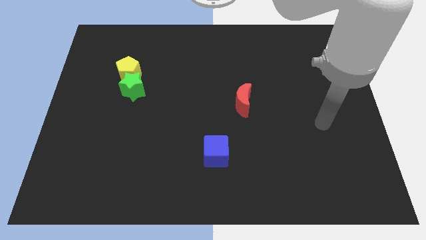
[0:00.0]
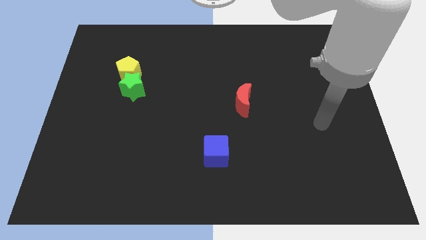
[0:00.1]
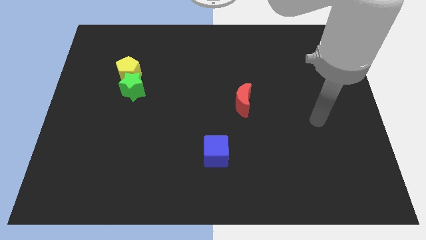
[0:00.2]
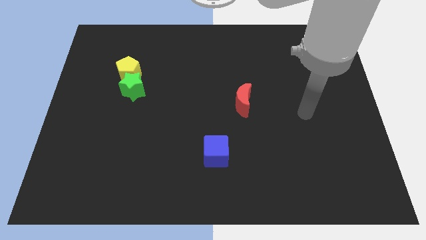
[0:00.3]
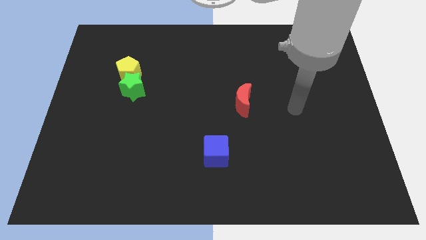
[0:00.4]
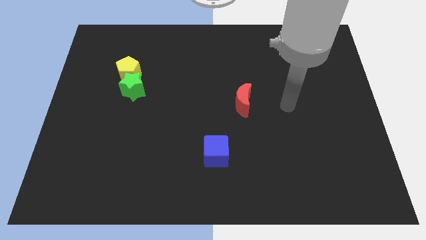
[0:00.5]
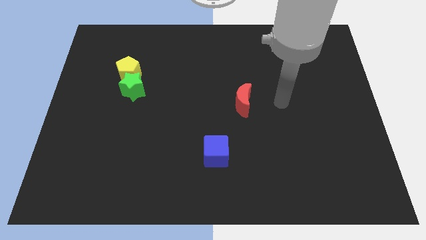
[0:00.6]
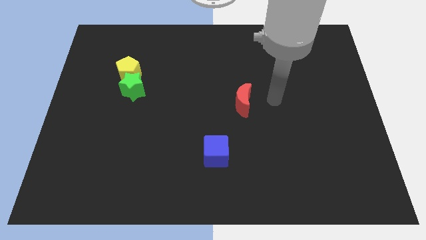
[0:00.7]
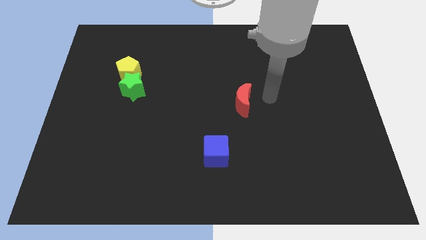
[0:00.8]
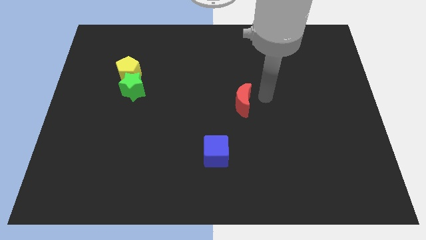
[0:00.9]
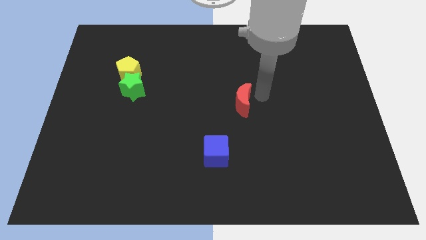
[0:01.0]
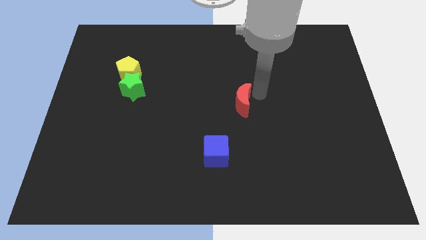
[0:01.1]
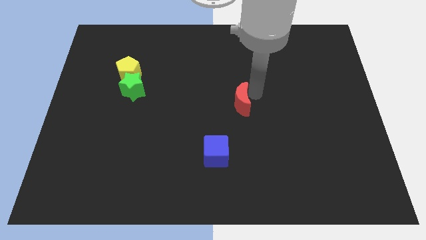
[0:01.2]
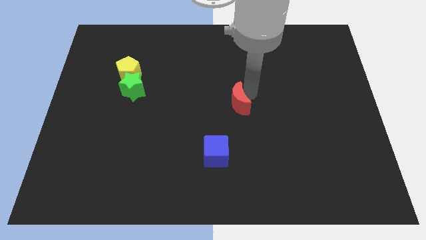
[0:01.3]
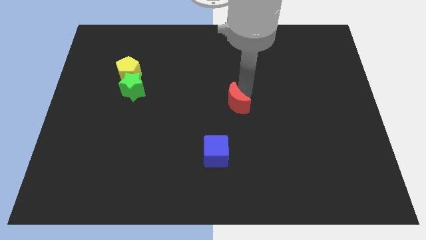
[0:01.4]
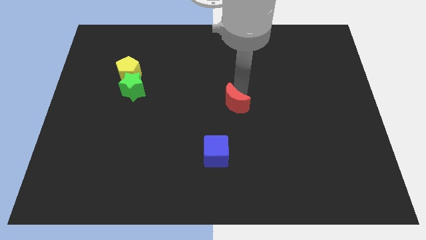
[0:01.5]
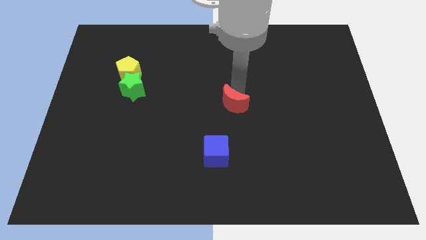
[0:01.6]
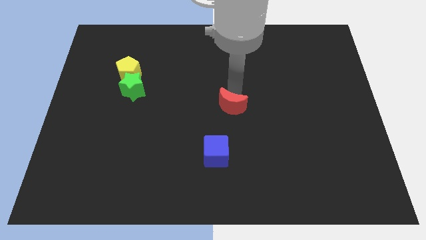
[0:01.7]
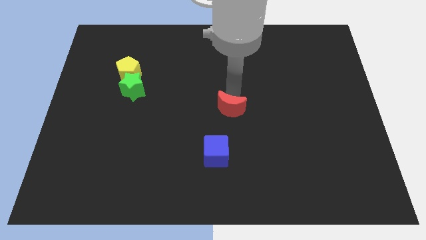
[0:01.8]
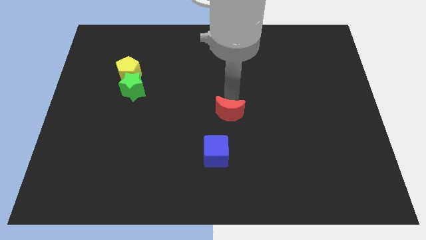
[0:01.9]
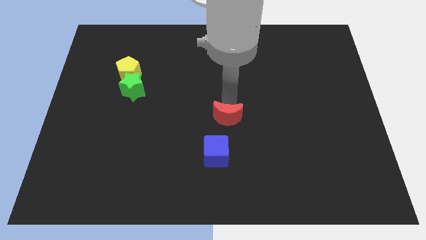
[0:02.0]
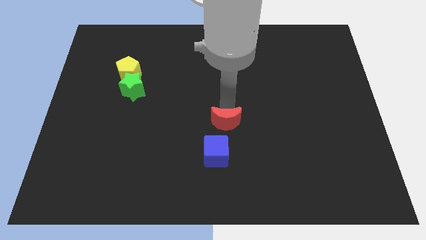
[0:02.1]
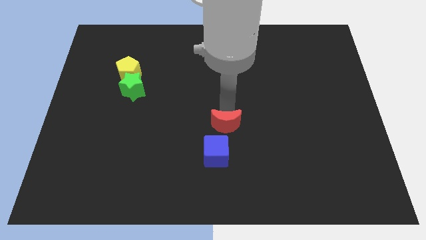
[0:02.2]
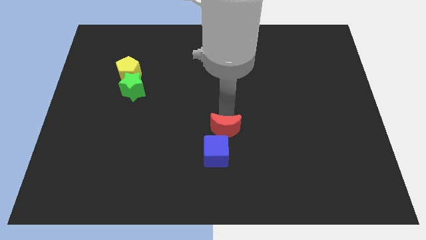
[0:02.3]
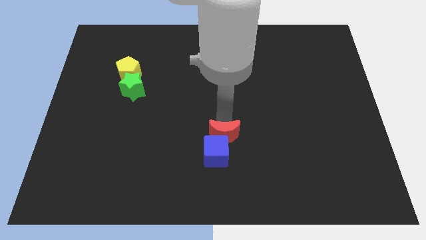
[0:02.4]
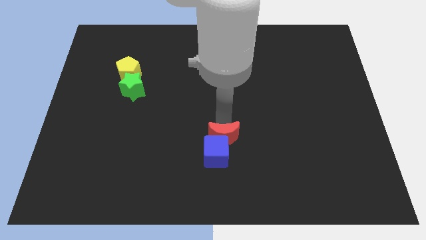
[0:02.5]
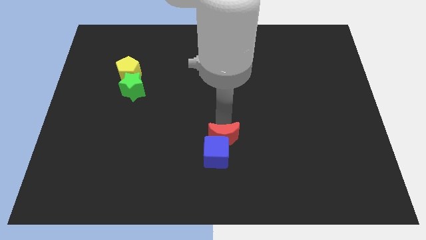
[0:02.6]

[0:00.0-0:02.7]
put the red block to the blue block

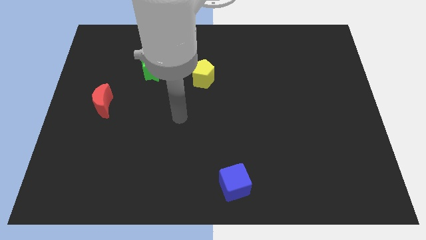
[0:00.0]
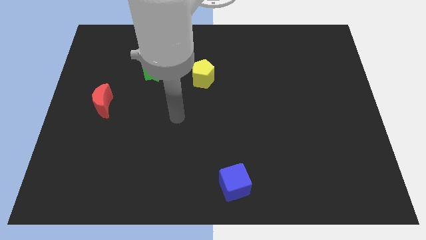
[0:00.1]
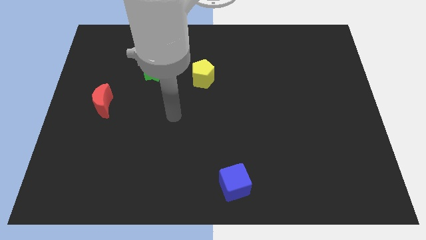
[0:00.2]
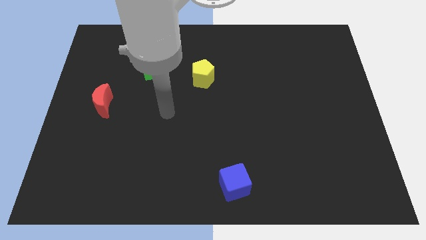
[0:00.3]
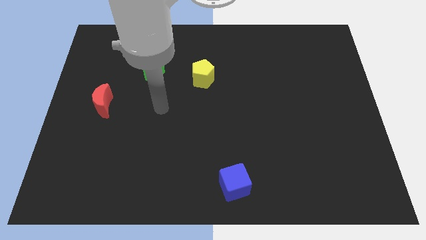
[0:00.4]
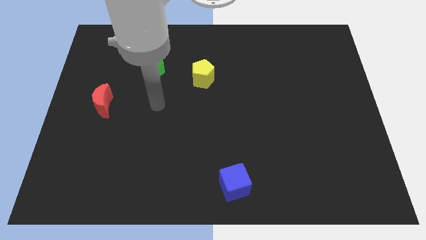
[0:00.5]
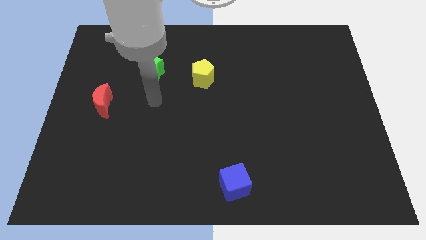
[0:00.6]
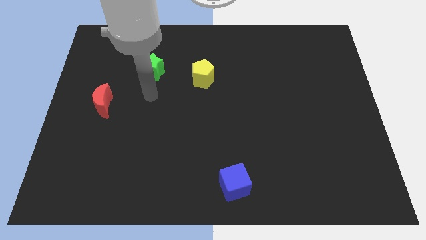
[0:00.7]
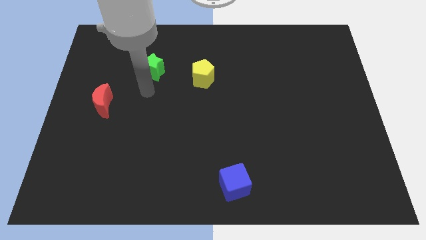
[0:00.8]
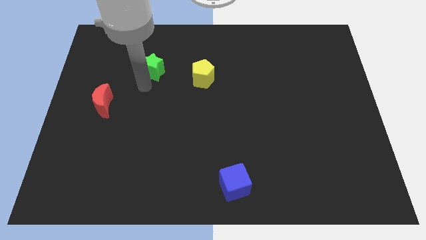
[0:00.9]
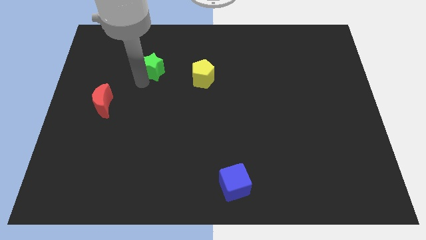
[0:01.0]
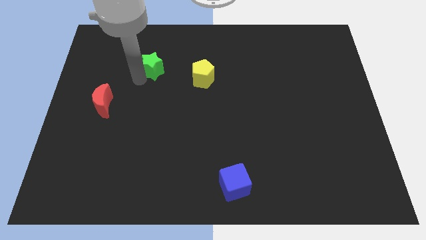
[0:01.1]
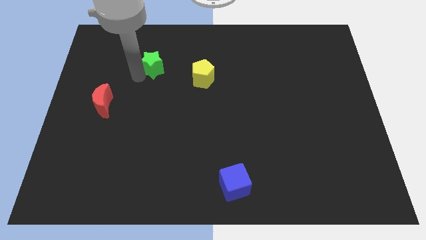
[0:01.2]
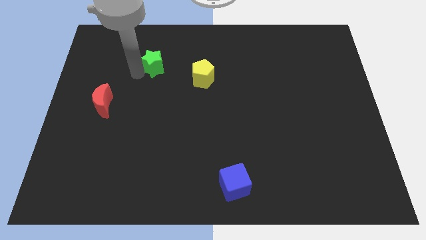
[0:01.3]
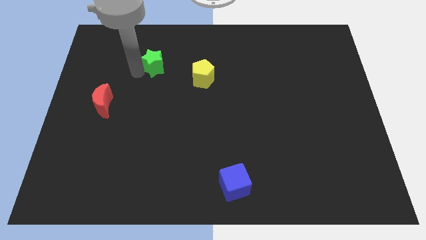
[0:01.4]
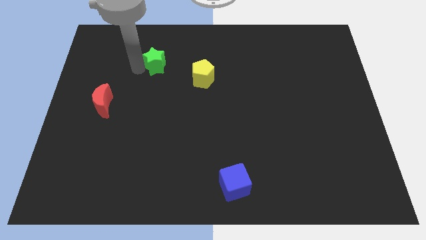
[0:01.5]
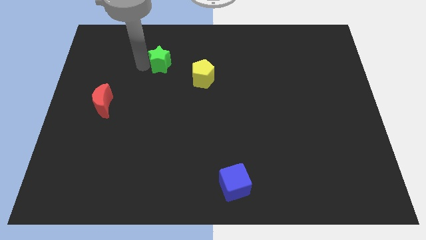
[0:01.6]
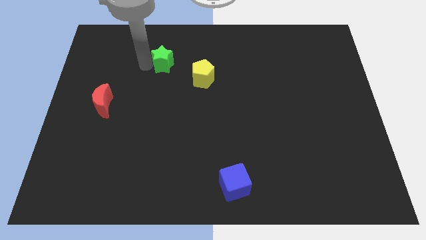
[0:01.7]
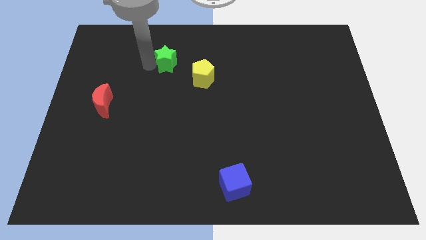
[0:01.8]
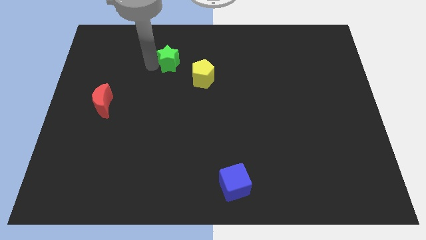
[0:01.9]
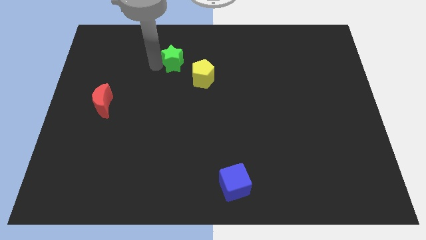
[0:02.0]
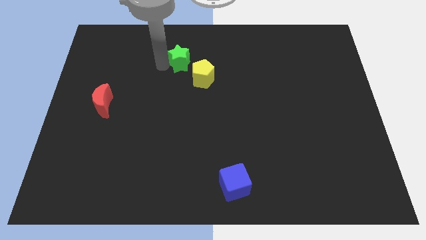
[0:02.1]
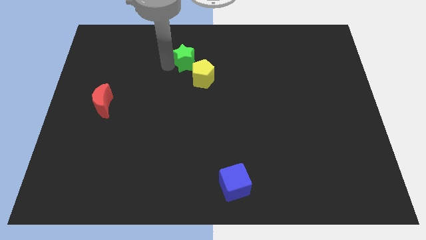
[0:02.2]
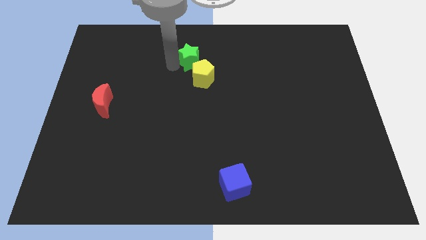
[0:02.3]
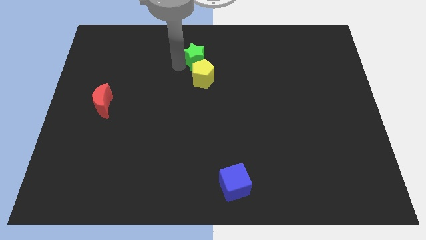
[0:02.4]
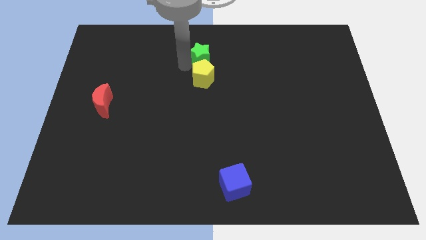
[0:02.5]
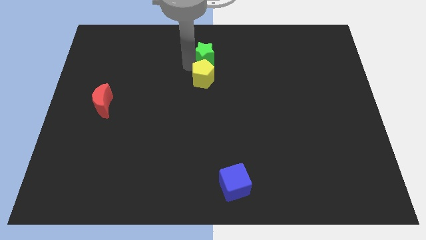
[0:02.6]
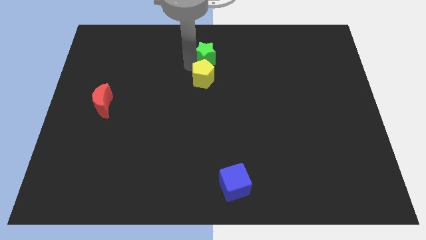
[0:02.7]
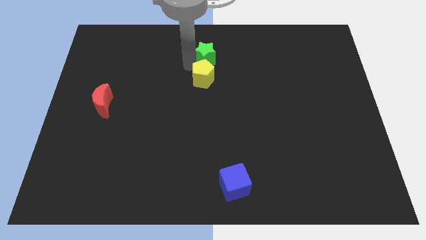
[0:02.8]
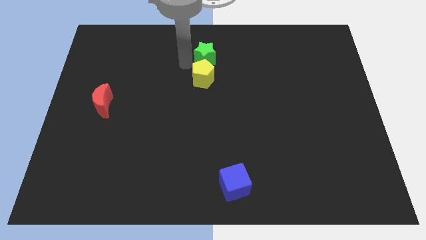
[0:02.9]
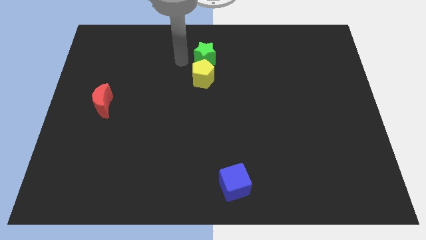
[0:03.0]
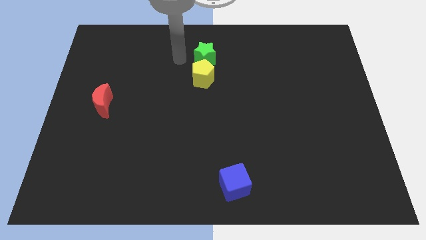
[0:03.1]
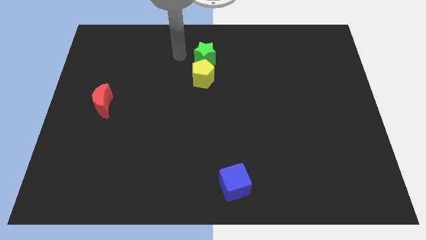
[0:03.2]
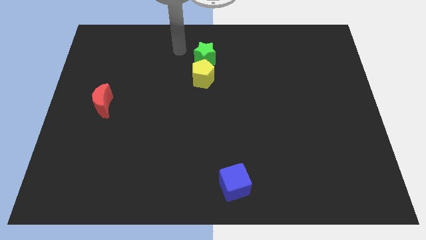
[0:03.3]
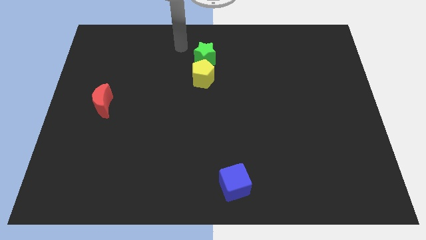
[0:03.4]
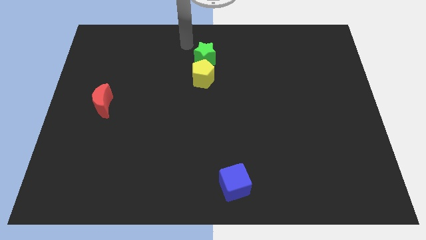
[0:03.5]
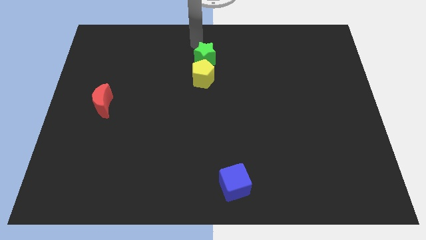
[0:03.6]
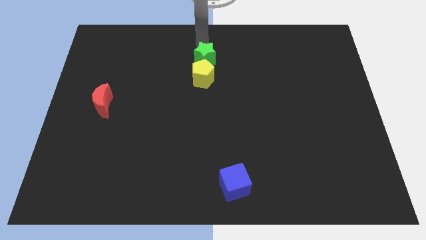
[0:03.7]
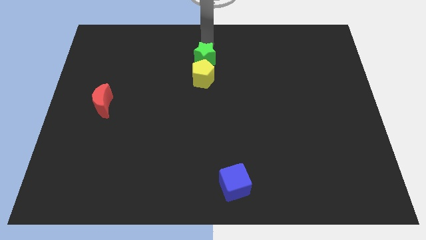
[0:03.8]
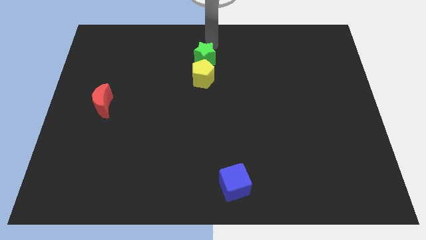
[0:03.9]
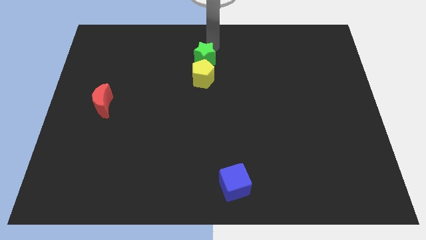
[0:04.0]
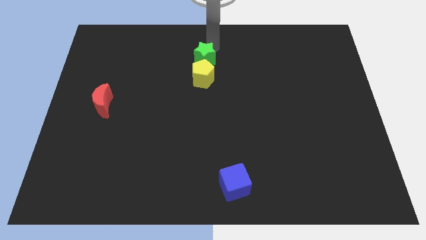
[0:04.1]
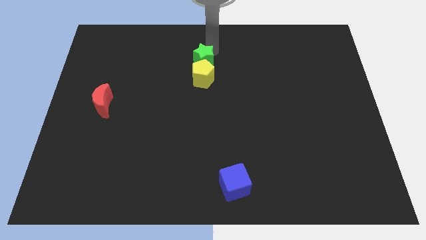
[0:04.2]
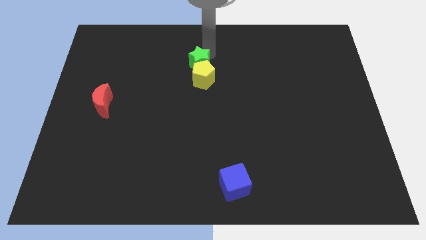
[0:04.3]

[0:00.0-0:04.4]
put the star to the pentagon

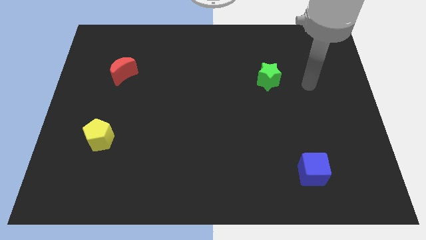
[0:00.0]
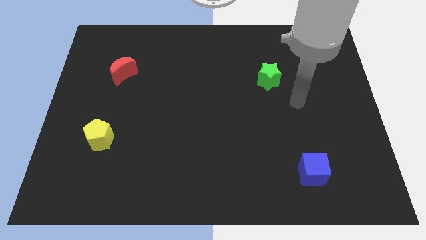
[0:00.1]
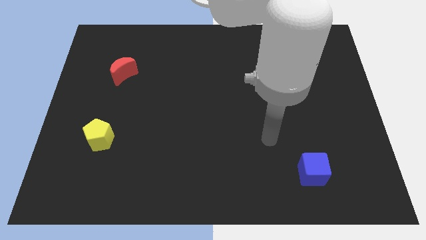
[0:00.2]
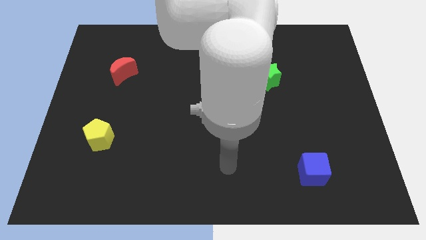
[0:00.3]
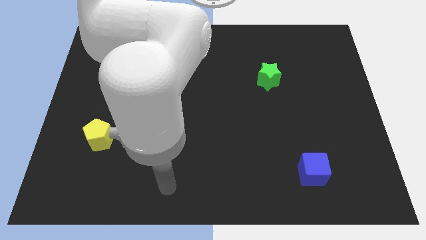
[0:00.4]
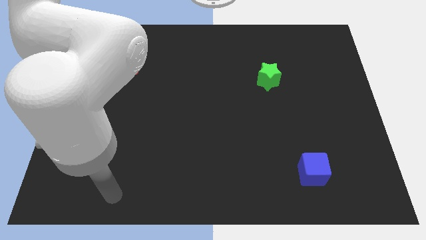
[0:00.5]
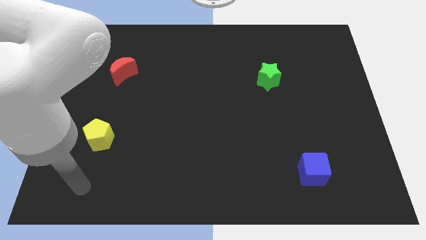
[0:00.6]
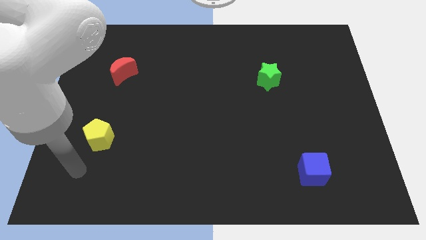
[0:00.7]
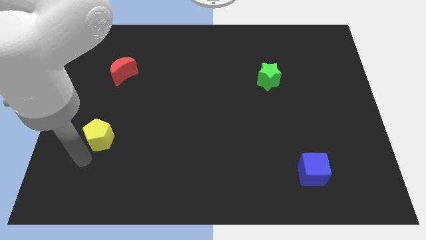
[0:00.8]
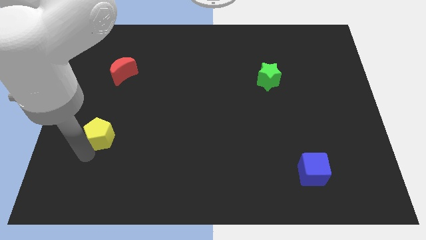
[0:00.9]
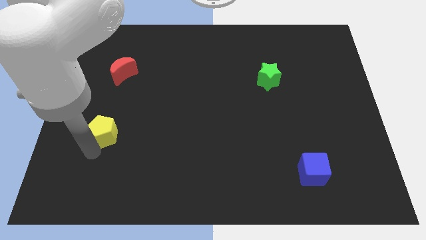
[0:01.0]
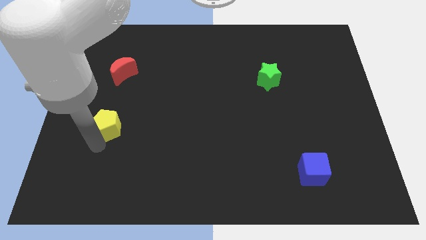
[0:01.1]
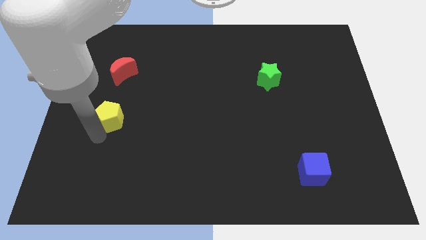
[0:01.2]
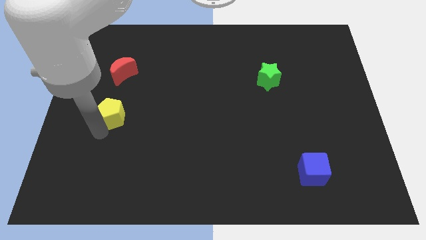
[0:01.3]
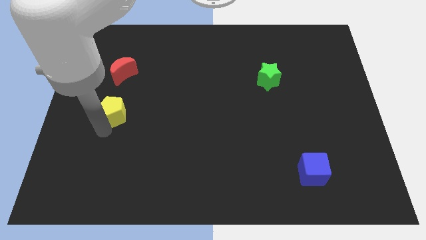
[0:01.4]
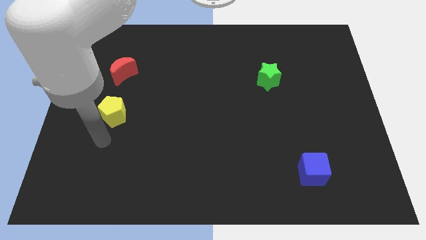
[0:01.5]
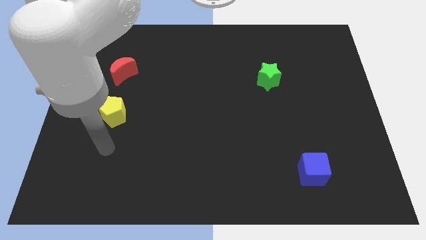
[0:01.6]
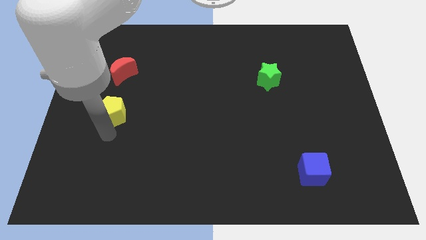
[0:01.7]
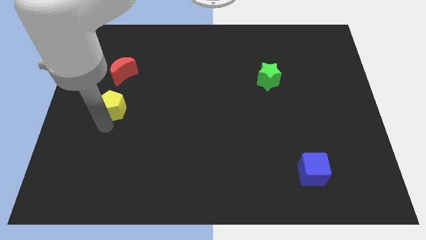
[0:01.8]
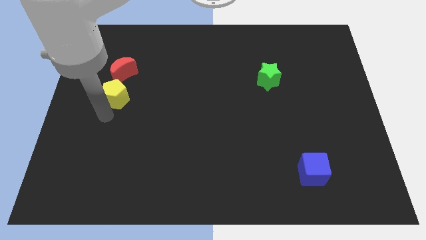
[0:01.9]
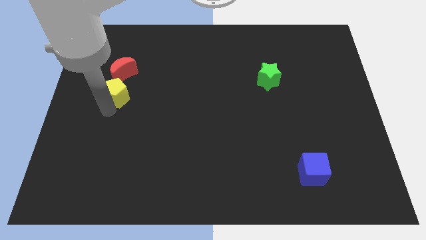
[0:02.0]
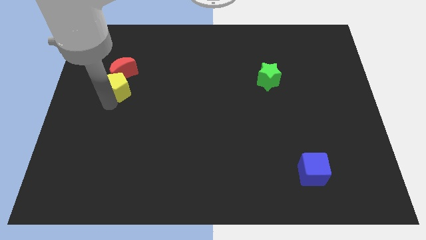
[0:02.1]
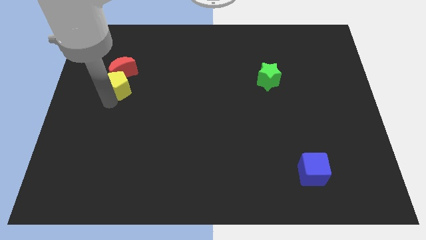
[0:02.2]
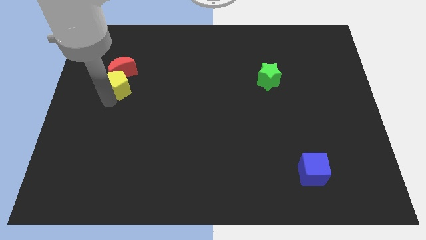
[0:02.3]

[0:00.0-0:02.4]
put the pentagon towards the moon
